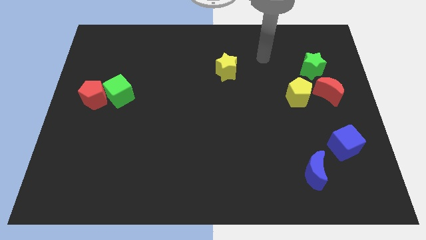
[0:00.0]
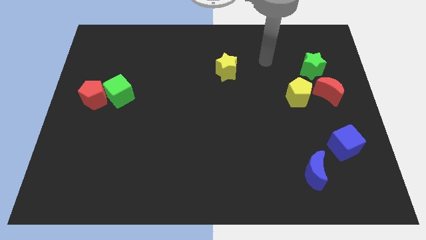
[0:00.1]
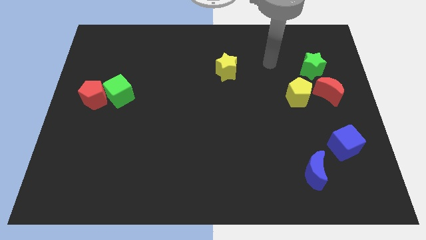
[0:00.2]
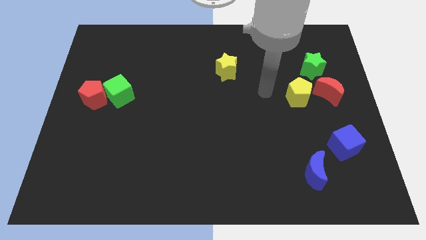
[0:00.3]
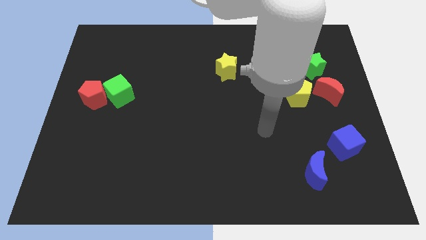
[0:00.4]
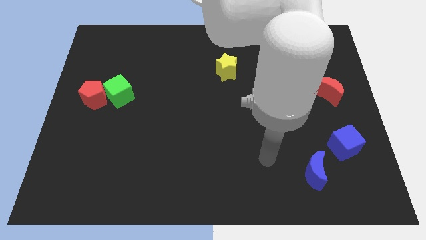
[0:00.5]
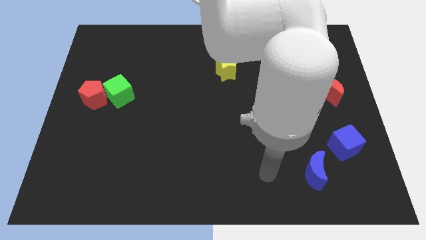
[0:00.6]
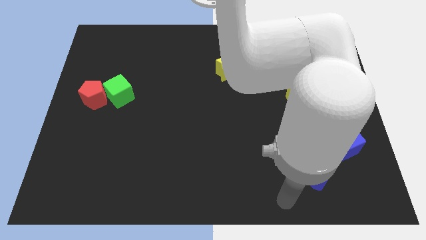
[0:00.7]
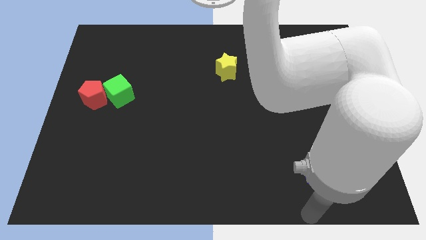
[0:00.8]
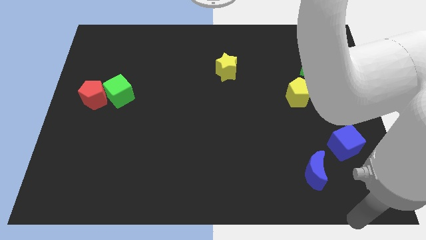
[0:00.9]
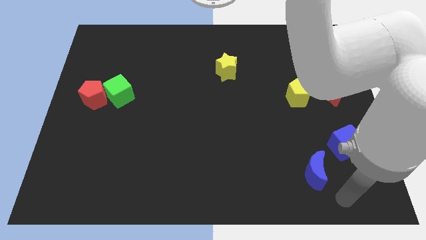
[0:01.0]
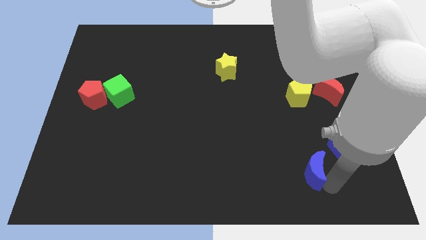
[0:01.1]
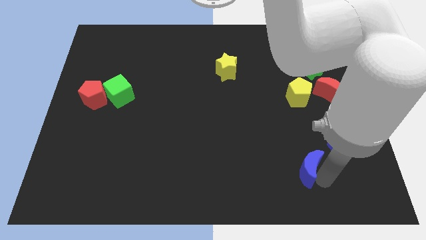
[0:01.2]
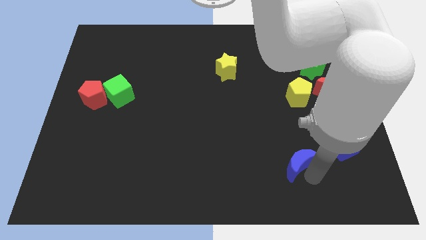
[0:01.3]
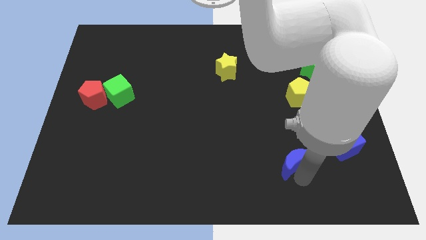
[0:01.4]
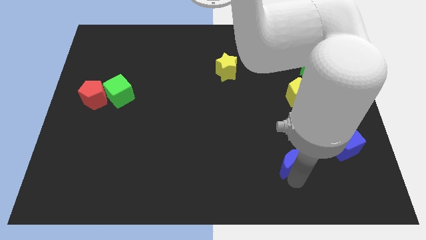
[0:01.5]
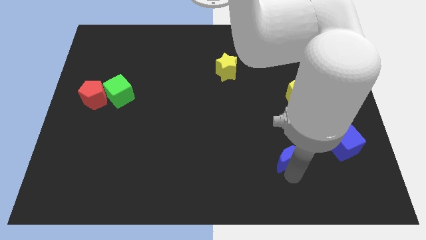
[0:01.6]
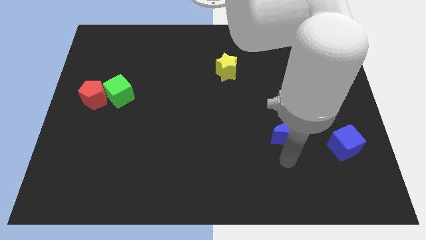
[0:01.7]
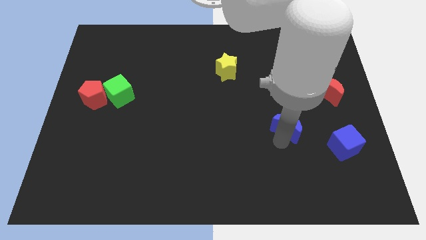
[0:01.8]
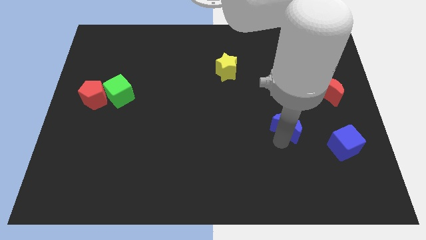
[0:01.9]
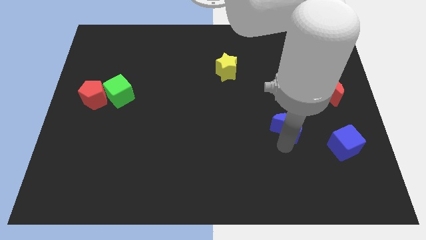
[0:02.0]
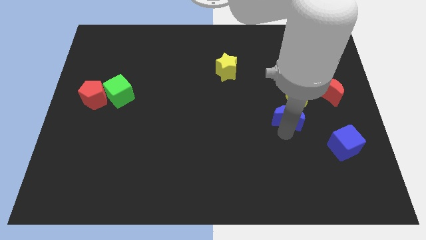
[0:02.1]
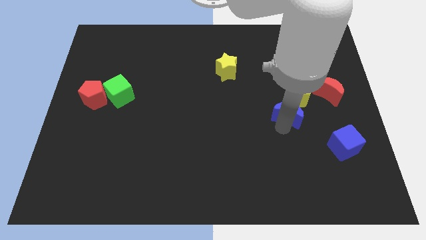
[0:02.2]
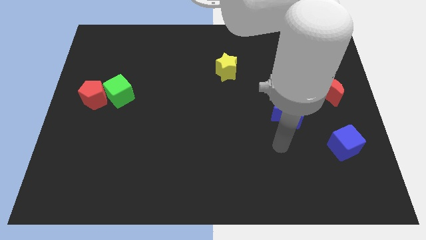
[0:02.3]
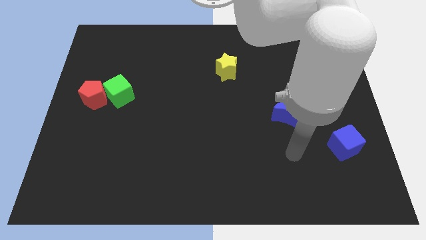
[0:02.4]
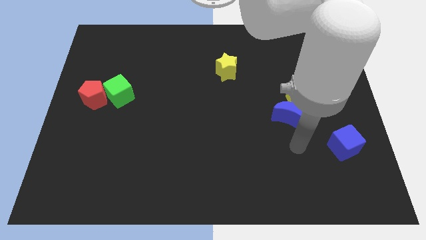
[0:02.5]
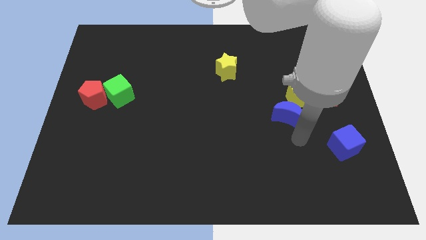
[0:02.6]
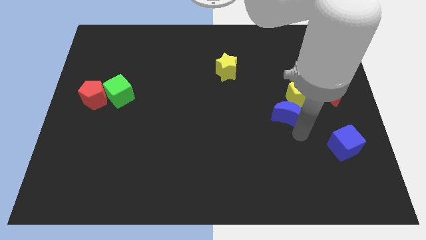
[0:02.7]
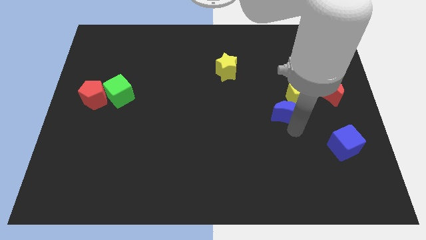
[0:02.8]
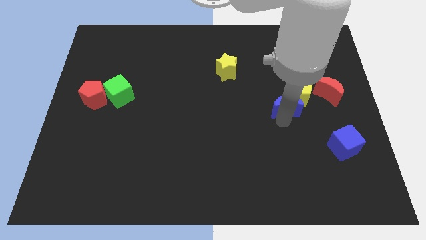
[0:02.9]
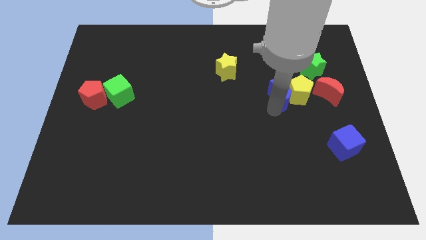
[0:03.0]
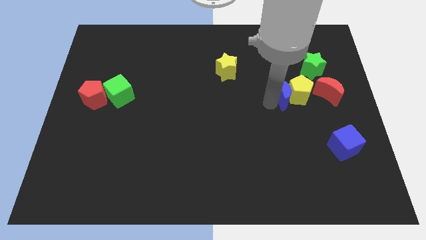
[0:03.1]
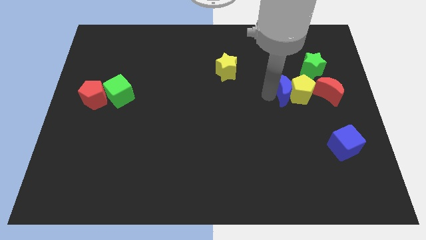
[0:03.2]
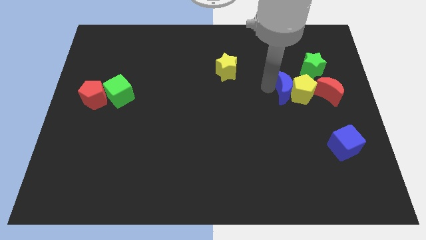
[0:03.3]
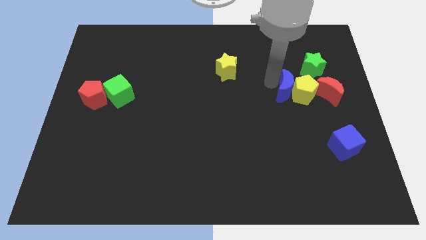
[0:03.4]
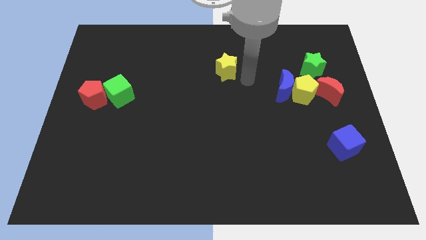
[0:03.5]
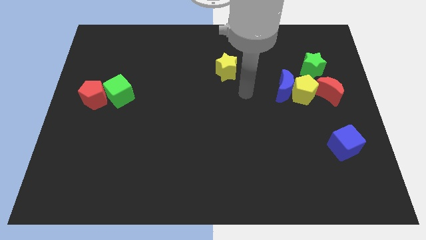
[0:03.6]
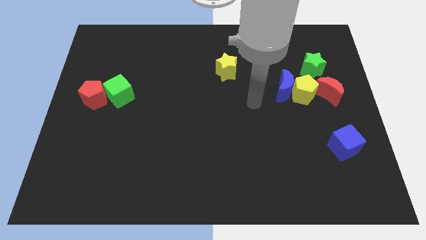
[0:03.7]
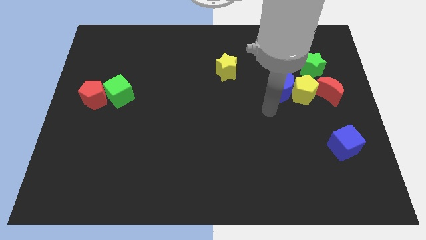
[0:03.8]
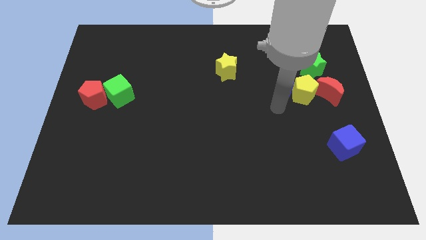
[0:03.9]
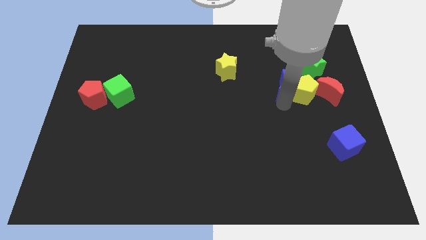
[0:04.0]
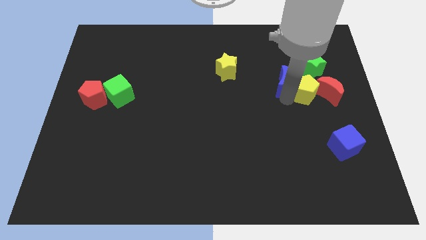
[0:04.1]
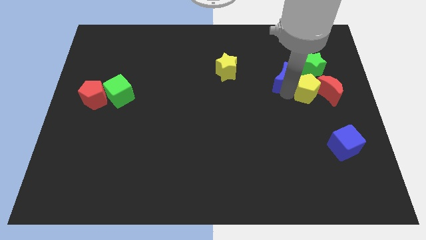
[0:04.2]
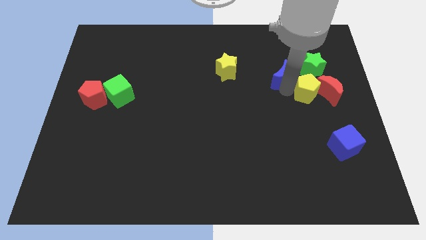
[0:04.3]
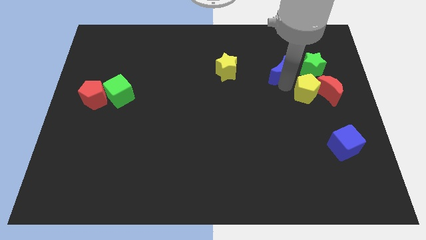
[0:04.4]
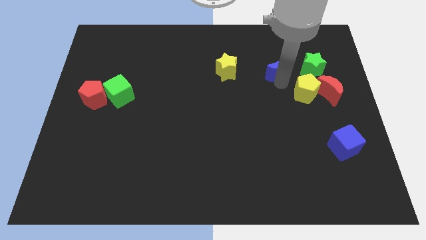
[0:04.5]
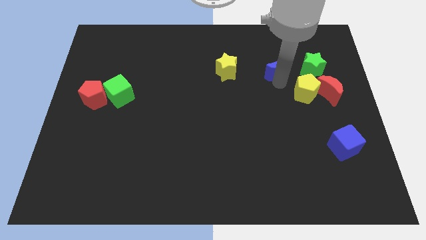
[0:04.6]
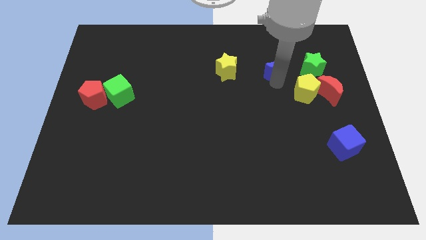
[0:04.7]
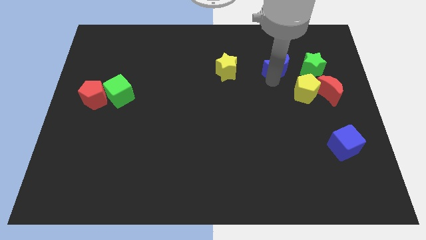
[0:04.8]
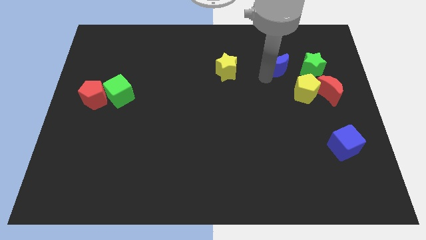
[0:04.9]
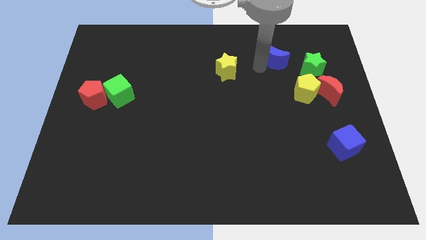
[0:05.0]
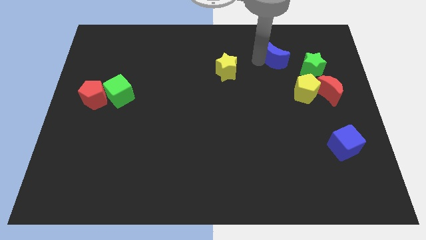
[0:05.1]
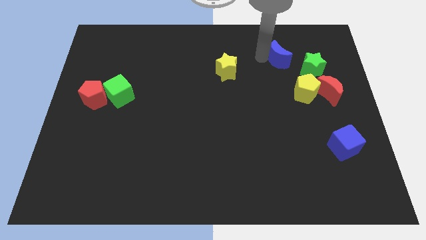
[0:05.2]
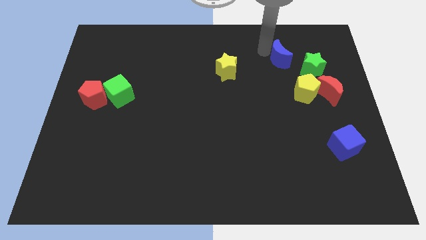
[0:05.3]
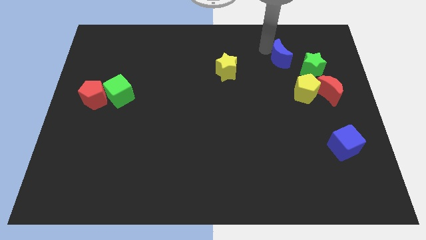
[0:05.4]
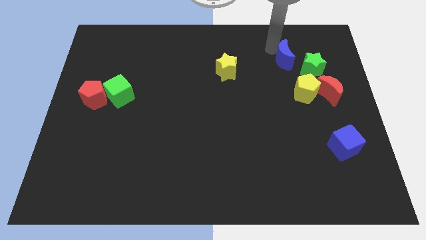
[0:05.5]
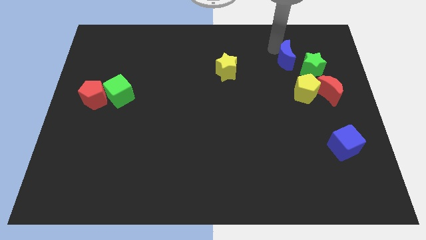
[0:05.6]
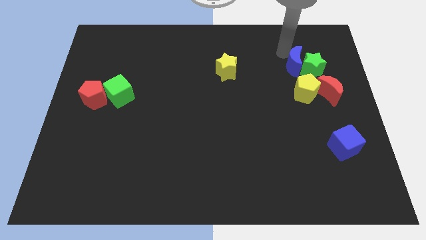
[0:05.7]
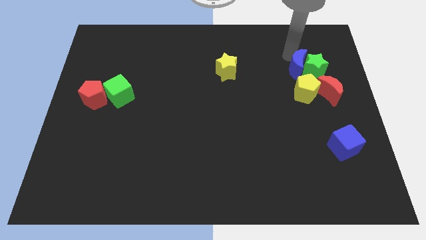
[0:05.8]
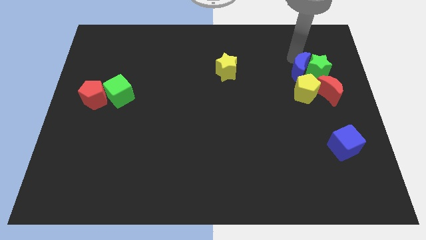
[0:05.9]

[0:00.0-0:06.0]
move the blue moon to the green star

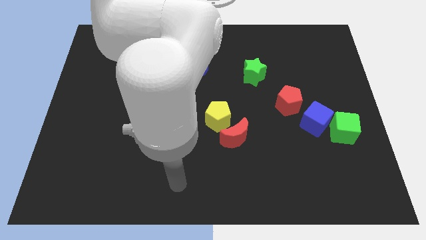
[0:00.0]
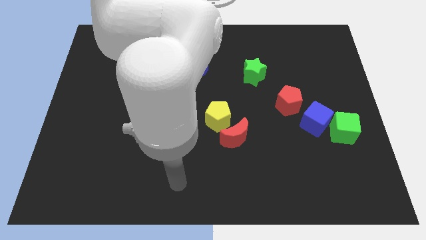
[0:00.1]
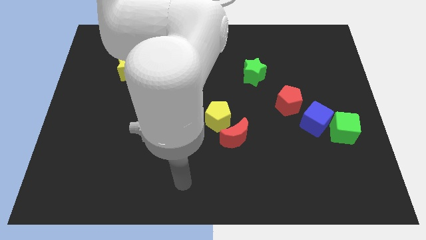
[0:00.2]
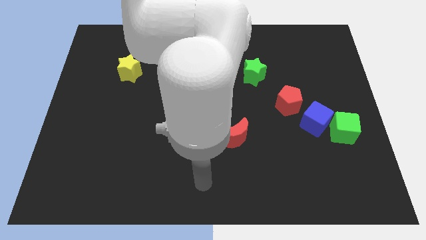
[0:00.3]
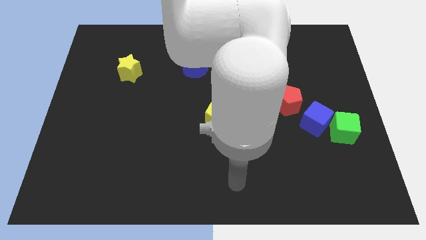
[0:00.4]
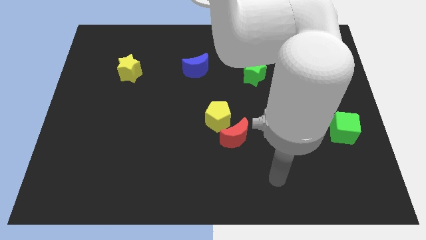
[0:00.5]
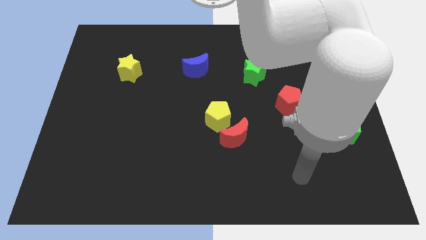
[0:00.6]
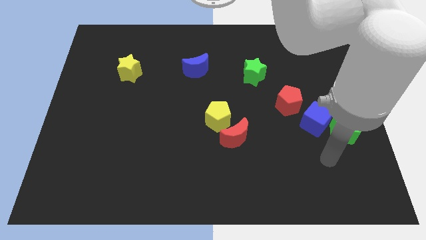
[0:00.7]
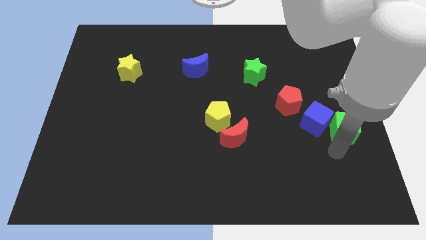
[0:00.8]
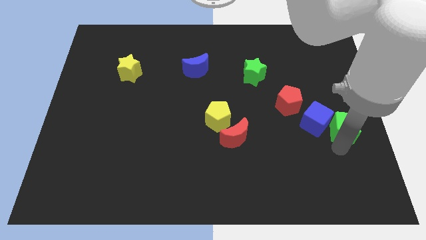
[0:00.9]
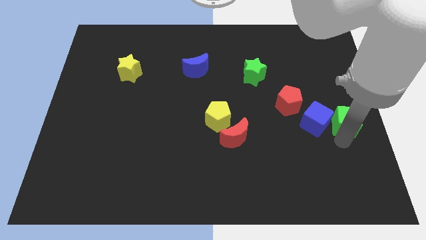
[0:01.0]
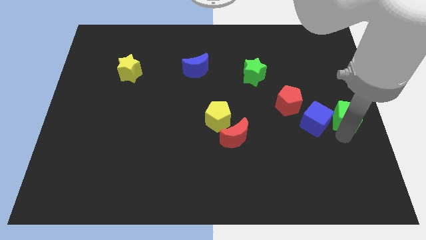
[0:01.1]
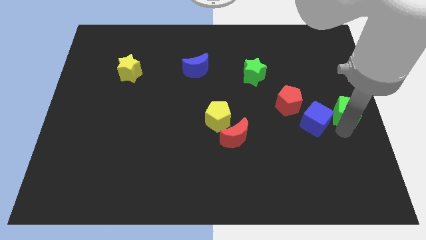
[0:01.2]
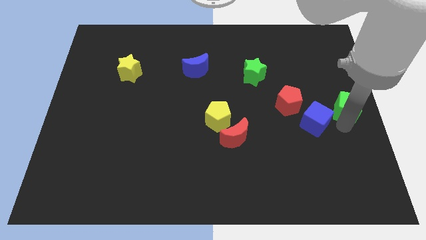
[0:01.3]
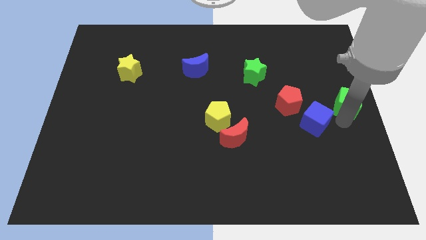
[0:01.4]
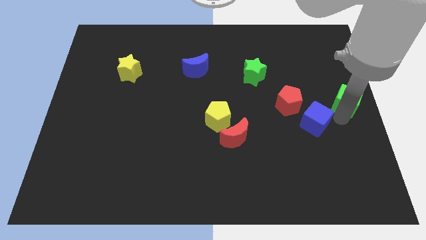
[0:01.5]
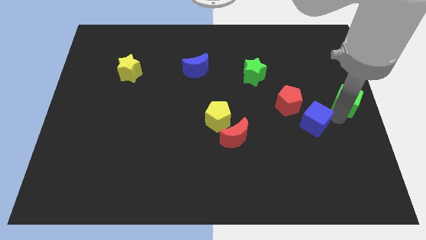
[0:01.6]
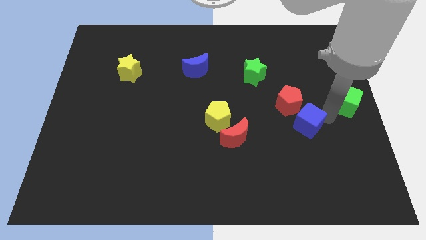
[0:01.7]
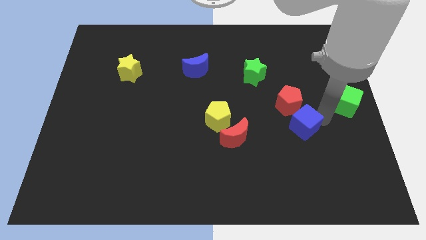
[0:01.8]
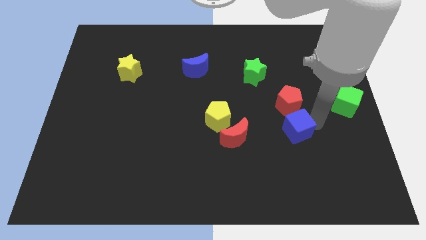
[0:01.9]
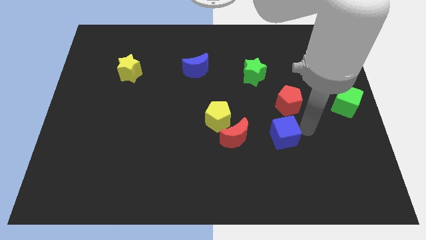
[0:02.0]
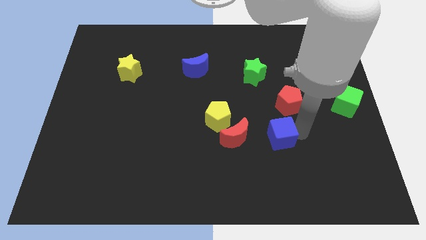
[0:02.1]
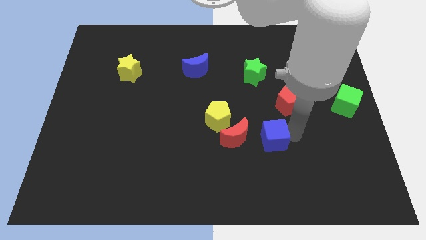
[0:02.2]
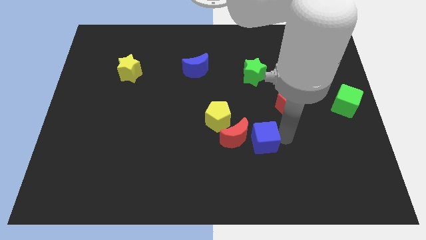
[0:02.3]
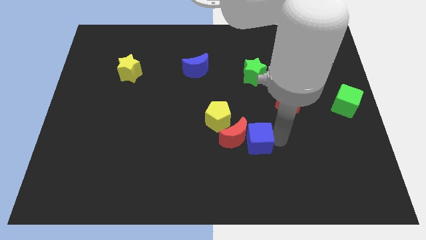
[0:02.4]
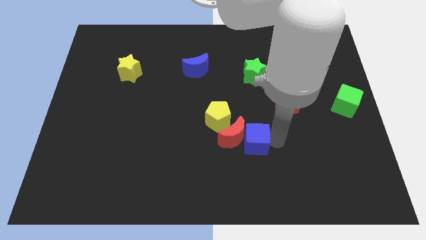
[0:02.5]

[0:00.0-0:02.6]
push the blue cube close to the red moon
